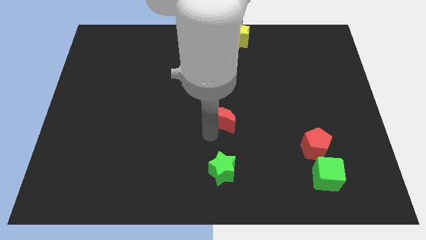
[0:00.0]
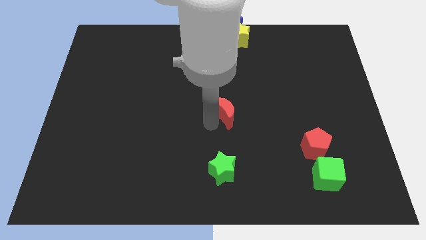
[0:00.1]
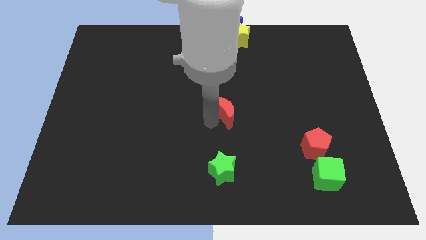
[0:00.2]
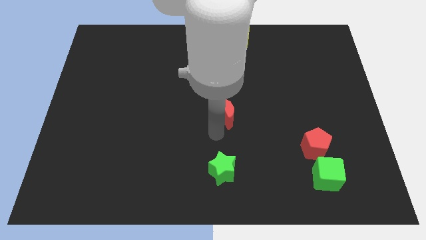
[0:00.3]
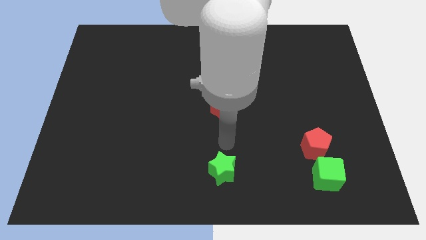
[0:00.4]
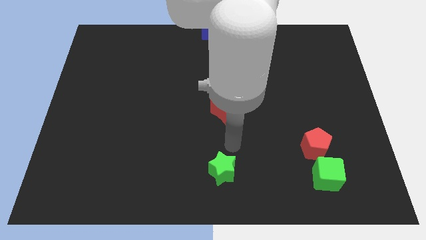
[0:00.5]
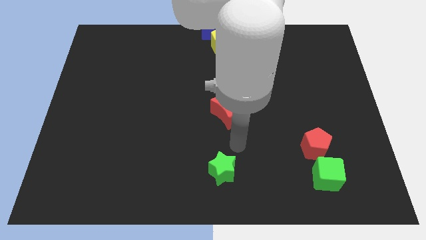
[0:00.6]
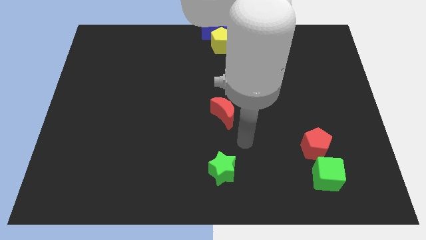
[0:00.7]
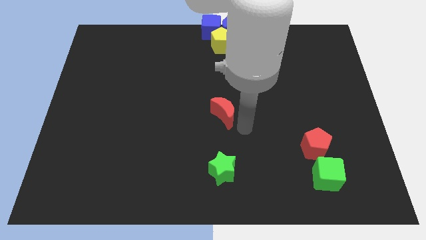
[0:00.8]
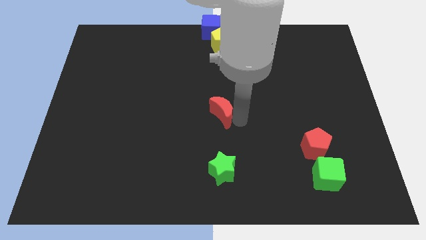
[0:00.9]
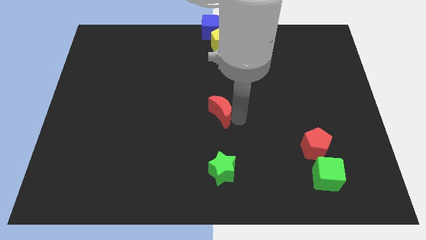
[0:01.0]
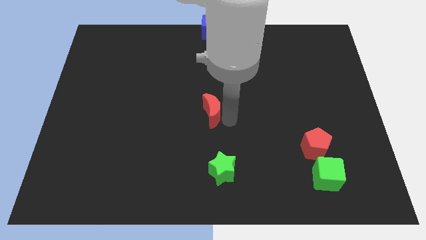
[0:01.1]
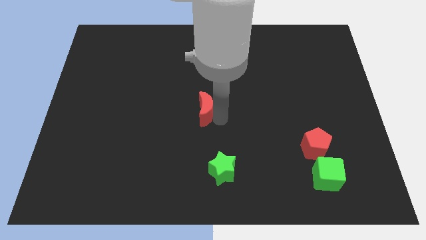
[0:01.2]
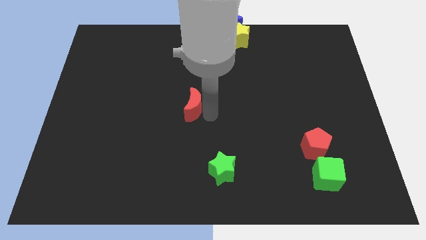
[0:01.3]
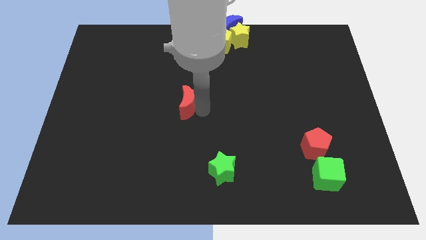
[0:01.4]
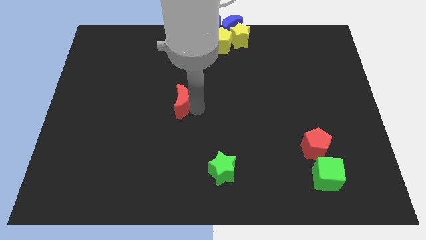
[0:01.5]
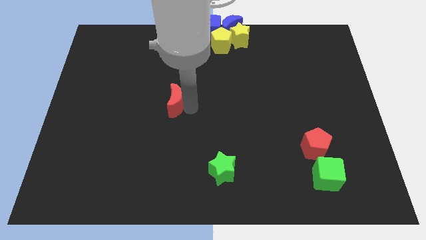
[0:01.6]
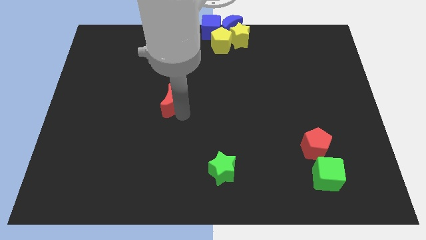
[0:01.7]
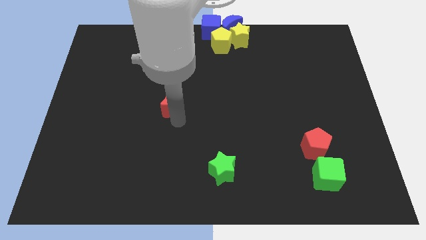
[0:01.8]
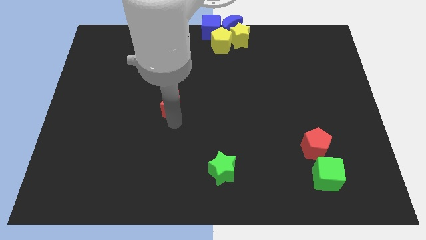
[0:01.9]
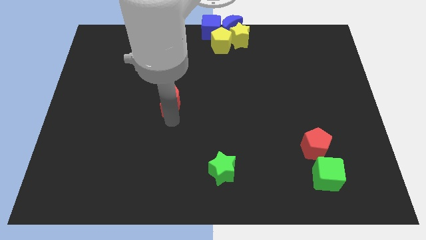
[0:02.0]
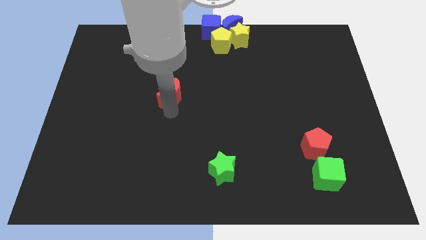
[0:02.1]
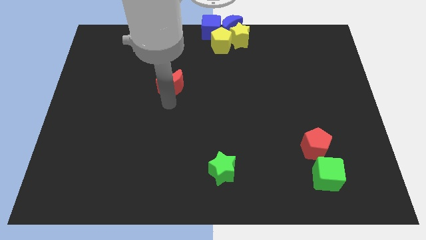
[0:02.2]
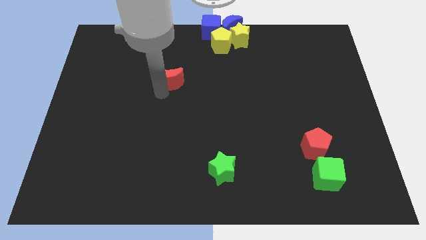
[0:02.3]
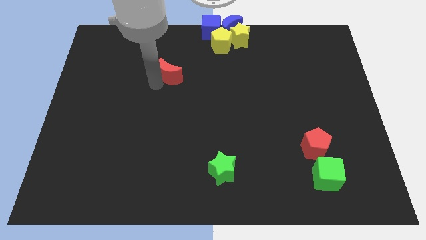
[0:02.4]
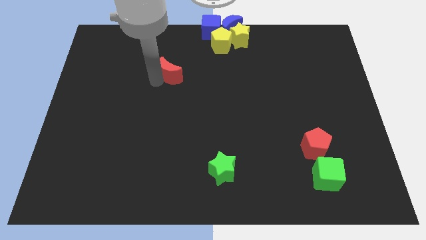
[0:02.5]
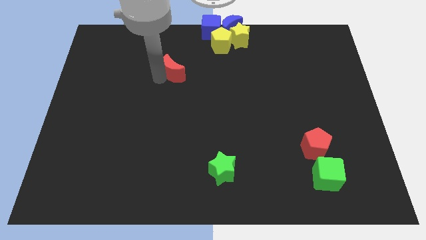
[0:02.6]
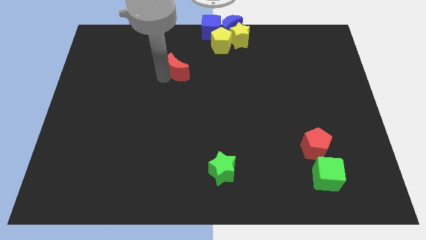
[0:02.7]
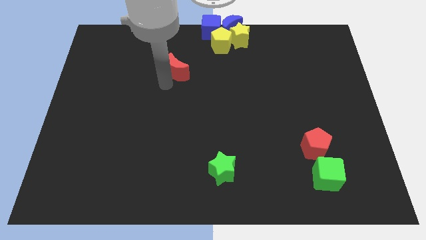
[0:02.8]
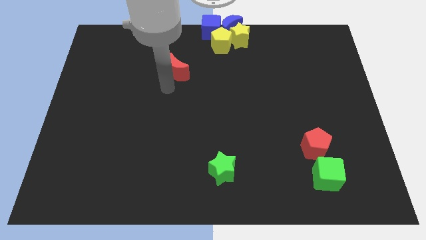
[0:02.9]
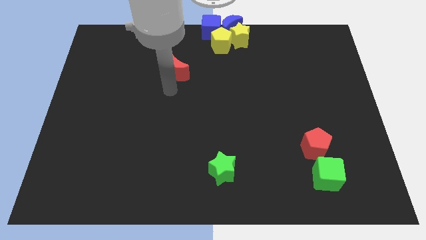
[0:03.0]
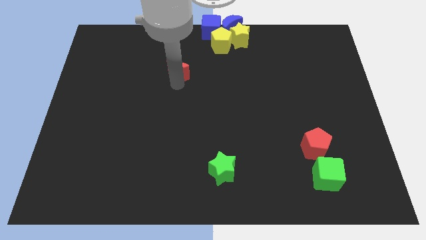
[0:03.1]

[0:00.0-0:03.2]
slightly push the red crescent towards the yellow pentagon

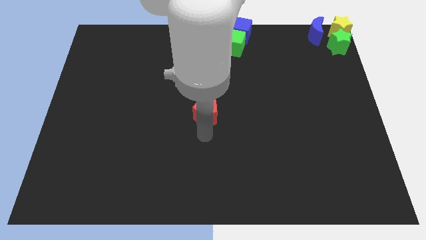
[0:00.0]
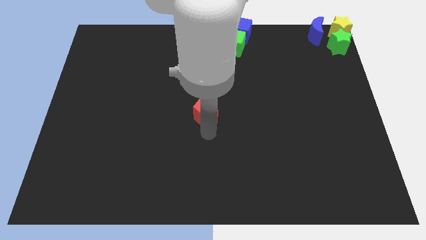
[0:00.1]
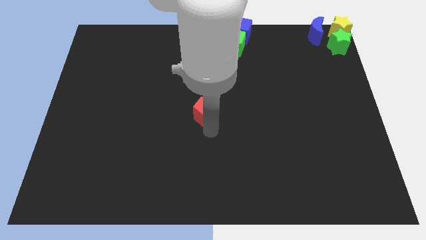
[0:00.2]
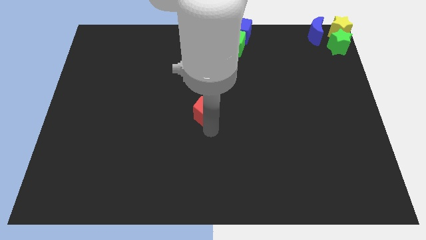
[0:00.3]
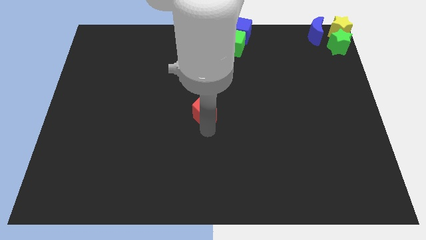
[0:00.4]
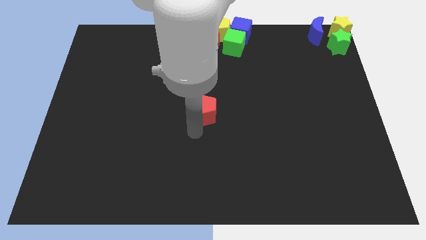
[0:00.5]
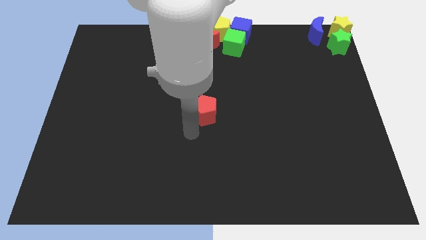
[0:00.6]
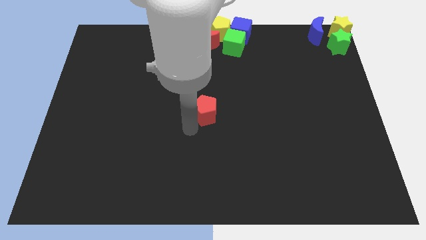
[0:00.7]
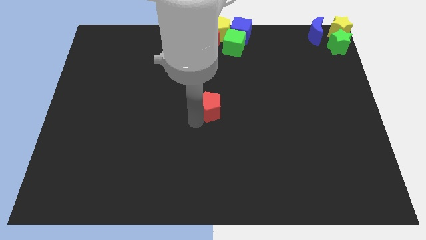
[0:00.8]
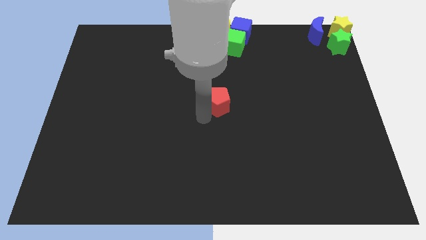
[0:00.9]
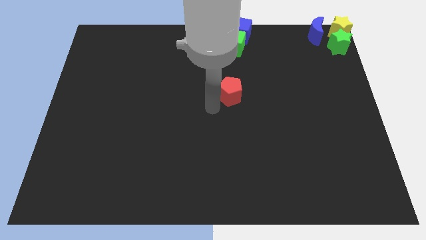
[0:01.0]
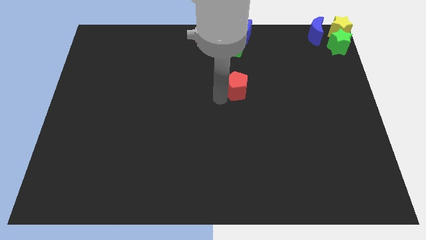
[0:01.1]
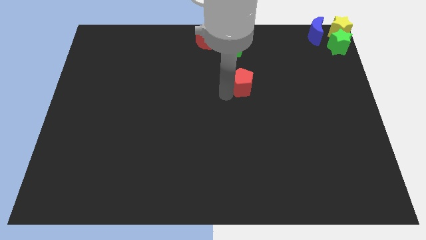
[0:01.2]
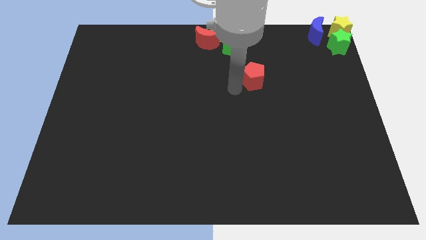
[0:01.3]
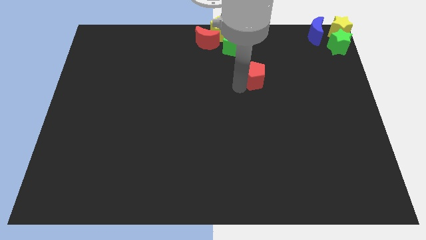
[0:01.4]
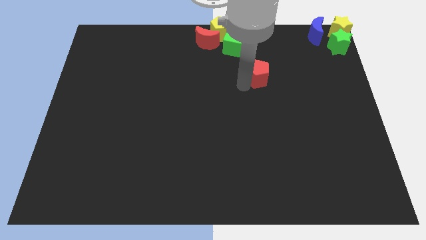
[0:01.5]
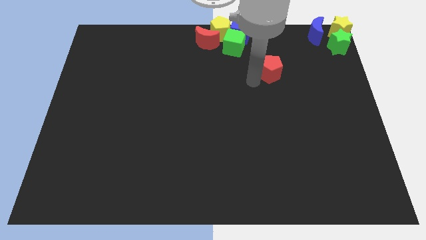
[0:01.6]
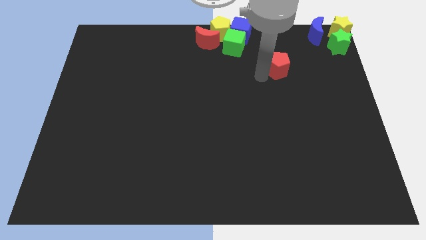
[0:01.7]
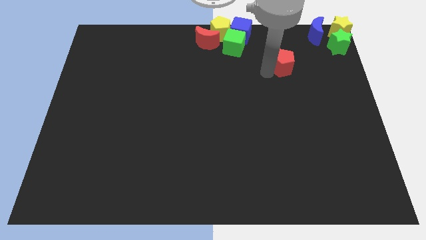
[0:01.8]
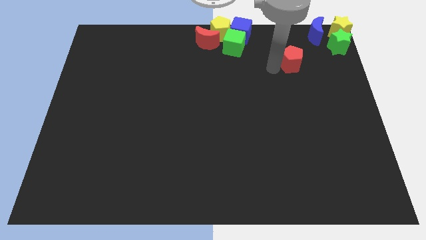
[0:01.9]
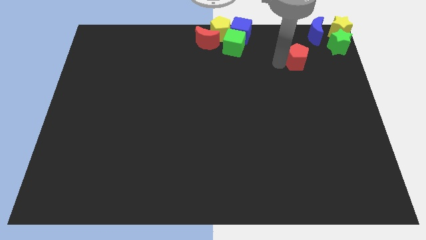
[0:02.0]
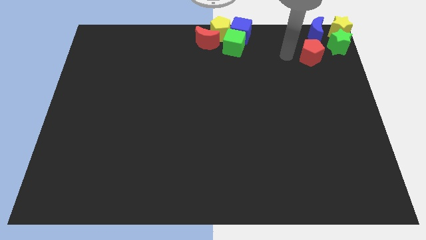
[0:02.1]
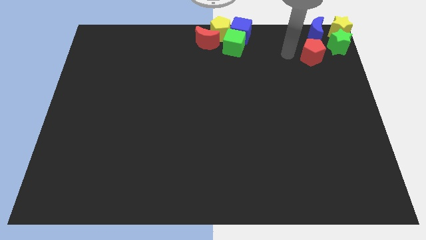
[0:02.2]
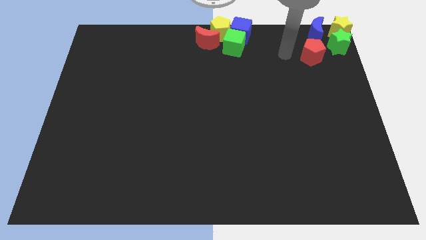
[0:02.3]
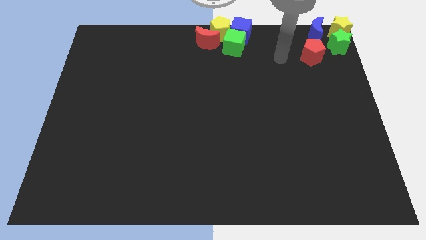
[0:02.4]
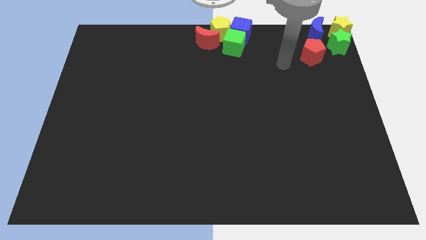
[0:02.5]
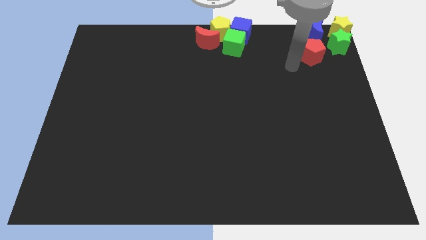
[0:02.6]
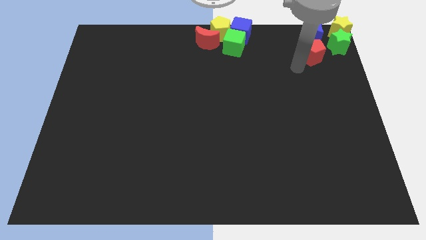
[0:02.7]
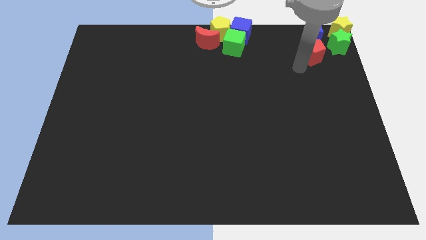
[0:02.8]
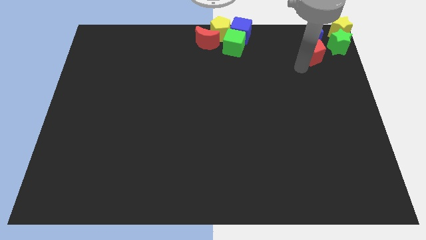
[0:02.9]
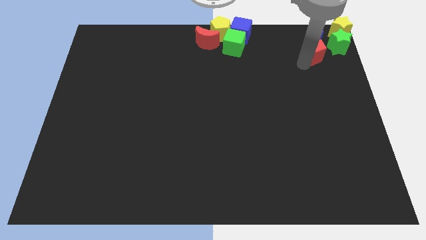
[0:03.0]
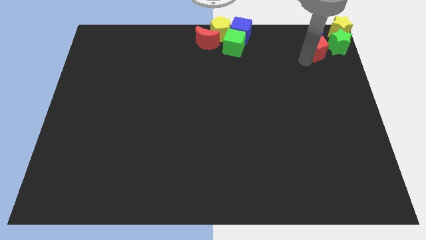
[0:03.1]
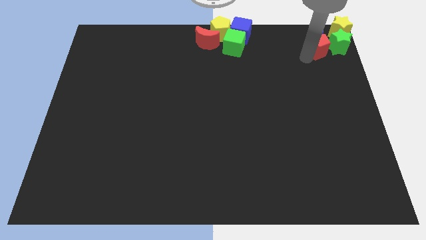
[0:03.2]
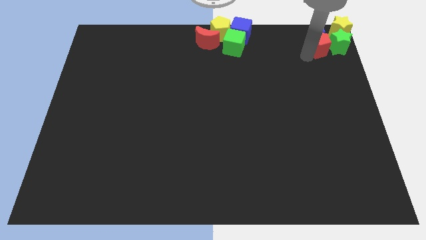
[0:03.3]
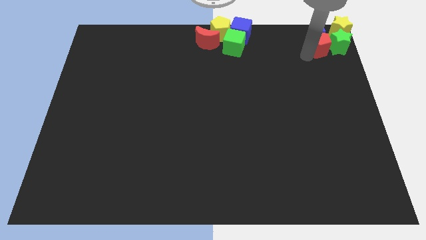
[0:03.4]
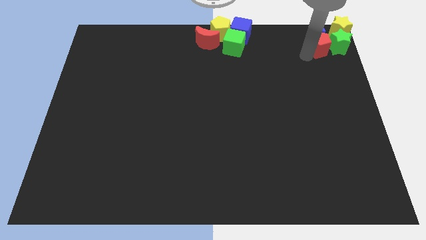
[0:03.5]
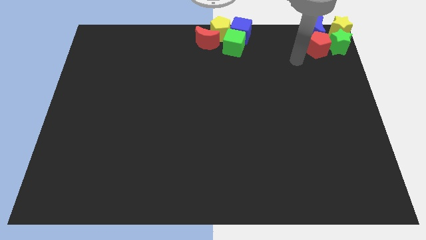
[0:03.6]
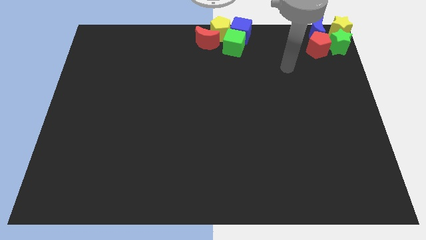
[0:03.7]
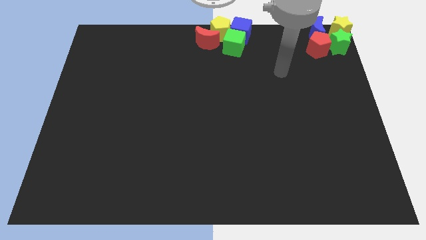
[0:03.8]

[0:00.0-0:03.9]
put the red pentagon at the top right corner

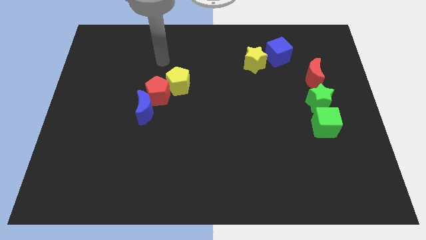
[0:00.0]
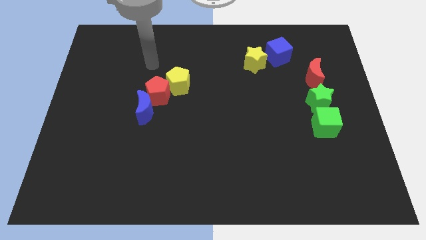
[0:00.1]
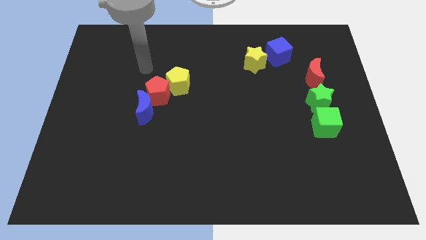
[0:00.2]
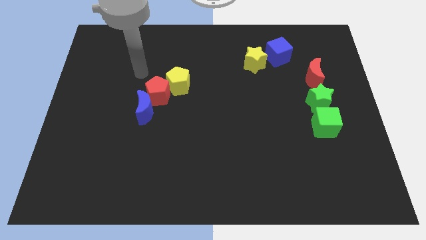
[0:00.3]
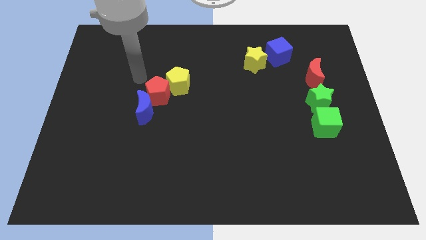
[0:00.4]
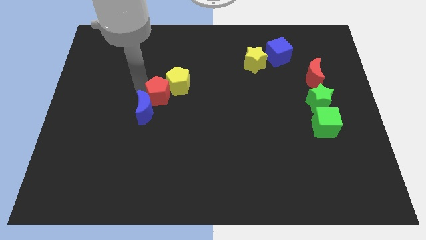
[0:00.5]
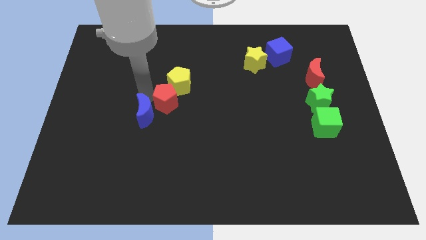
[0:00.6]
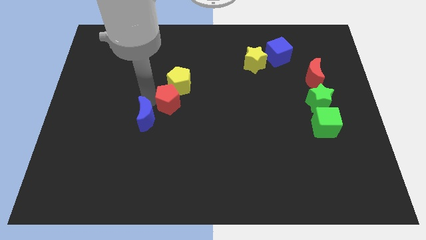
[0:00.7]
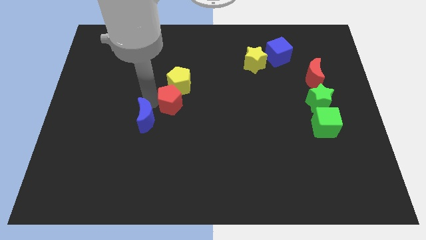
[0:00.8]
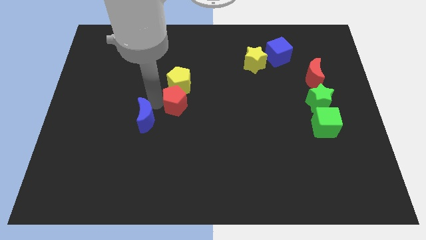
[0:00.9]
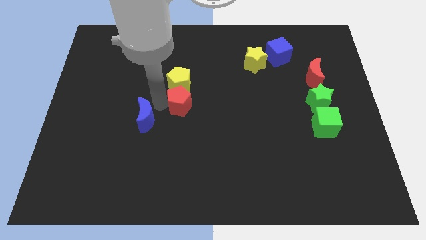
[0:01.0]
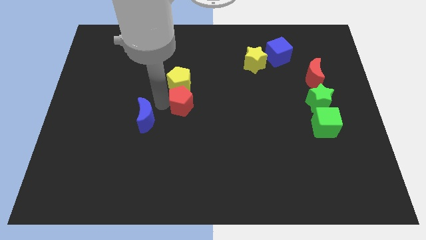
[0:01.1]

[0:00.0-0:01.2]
push the red pentagon to the bottom of the yellow pentagon

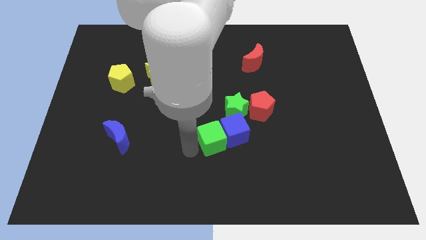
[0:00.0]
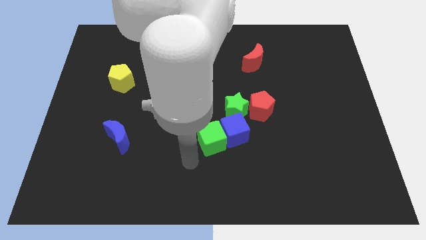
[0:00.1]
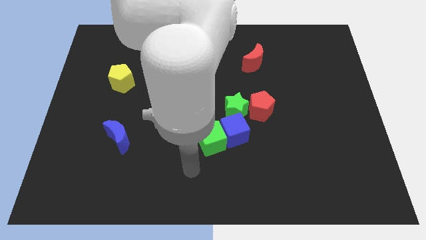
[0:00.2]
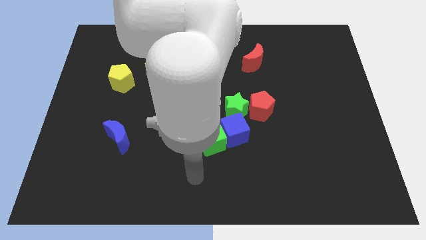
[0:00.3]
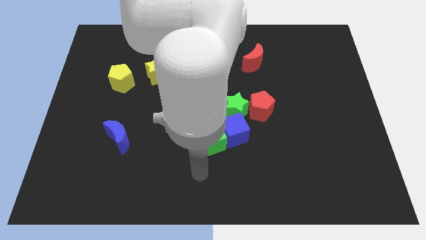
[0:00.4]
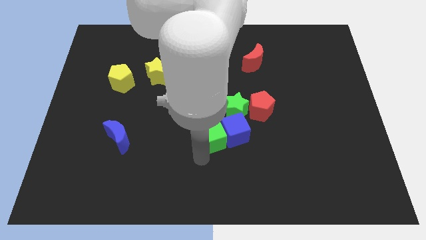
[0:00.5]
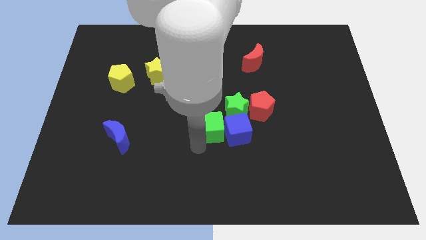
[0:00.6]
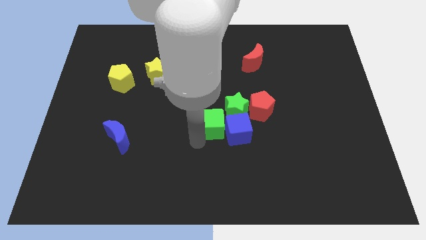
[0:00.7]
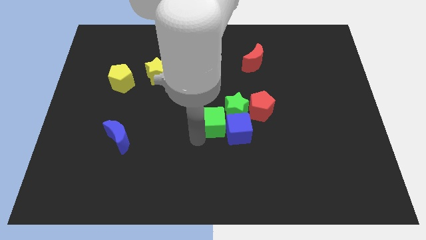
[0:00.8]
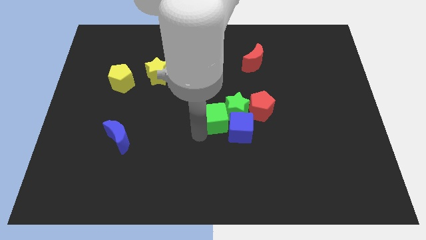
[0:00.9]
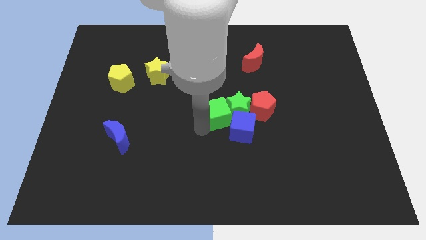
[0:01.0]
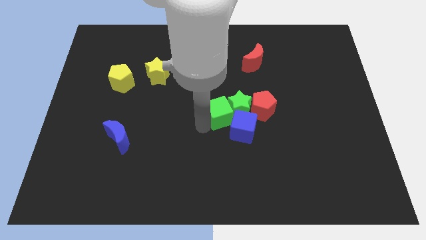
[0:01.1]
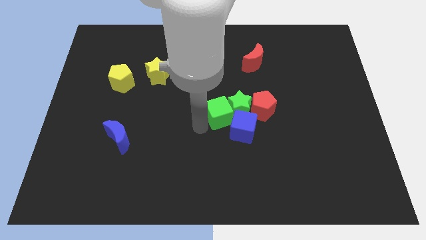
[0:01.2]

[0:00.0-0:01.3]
push the green cube into the green star
